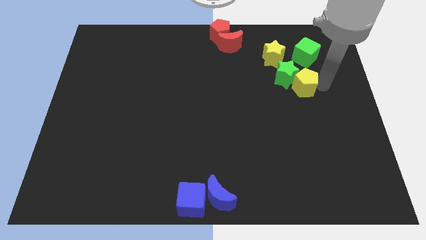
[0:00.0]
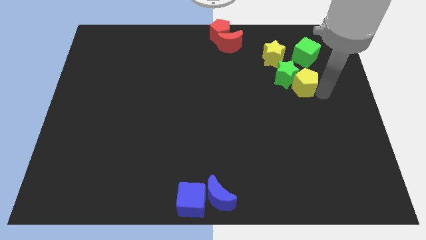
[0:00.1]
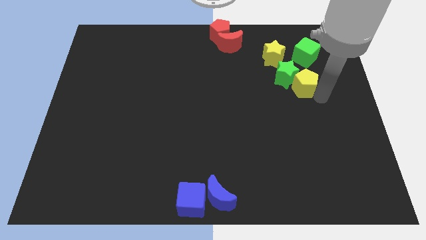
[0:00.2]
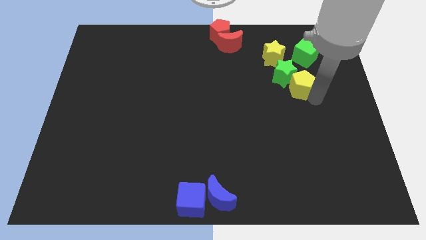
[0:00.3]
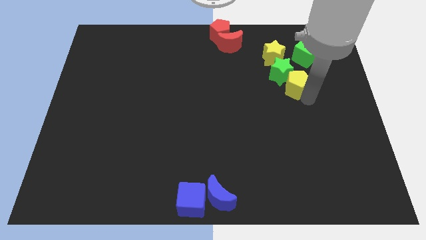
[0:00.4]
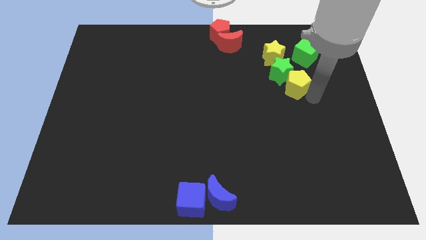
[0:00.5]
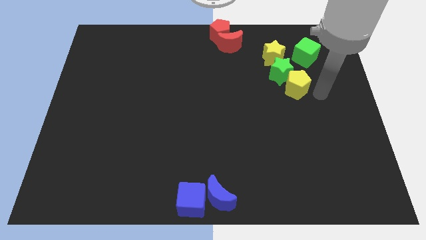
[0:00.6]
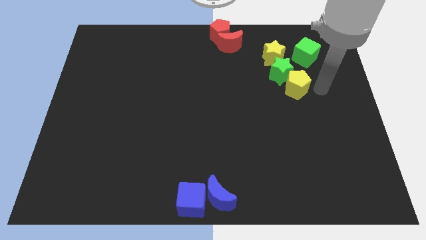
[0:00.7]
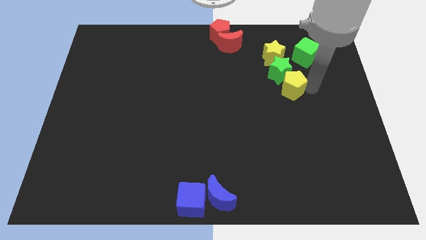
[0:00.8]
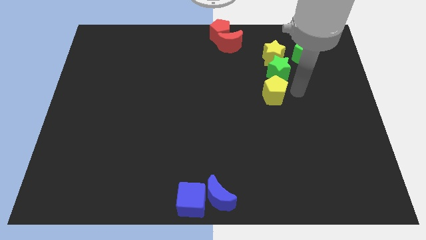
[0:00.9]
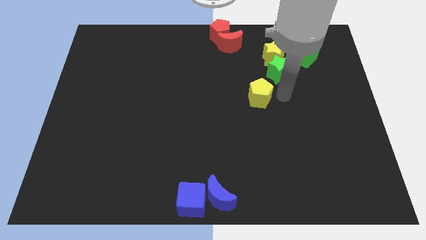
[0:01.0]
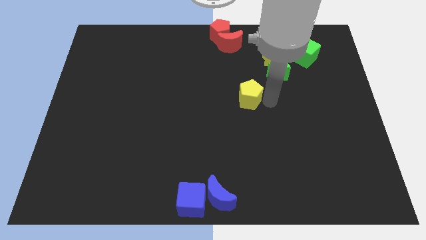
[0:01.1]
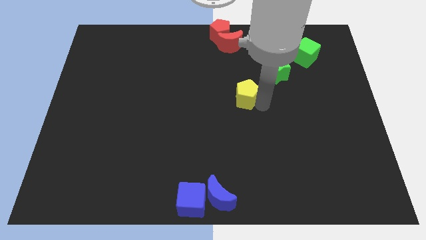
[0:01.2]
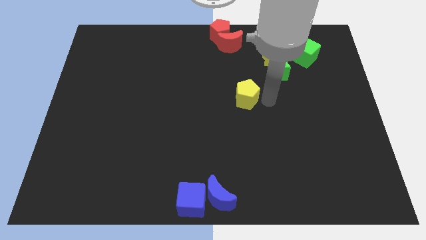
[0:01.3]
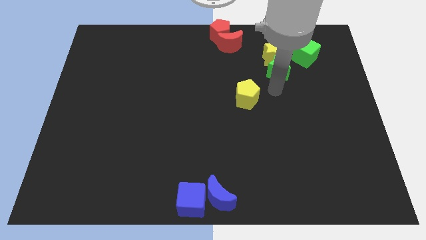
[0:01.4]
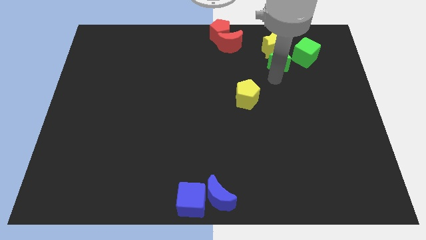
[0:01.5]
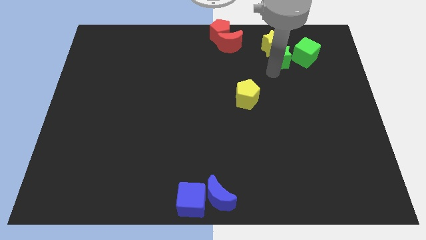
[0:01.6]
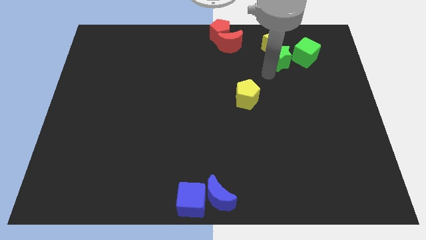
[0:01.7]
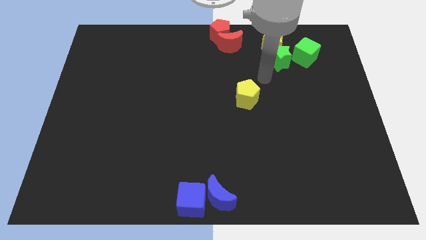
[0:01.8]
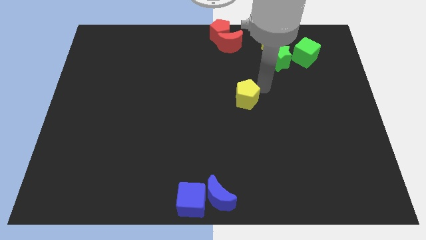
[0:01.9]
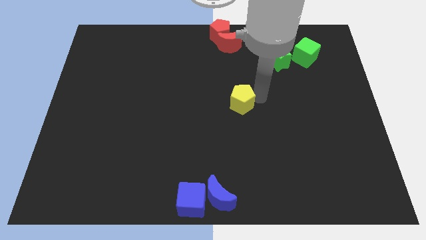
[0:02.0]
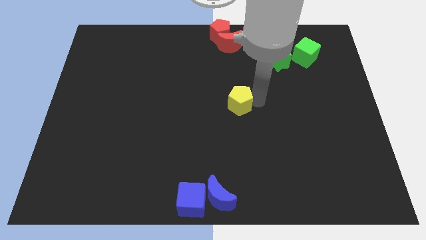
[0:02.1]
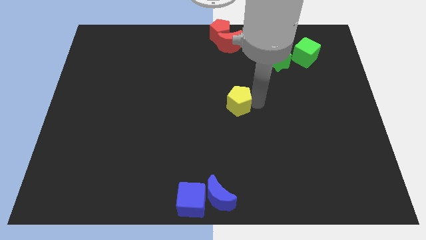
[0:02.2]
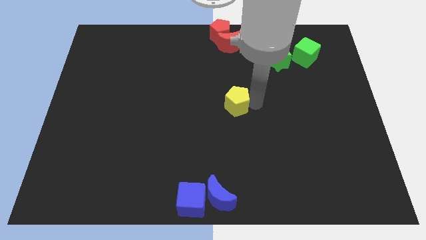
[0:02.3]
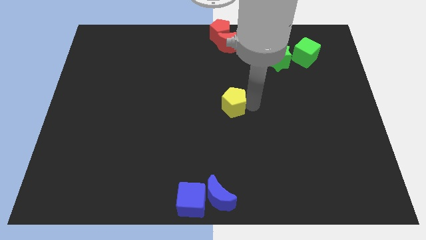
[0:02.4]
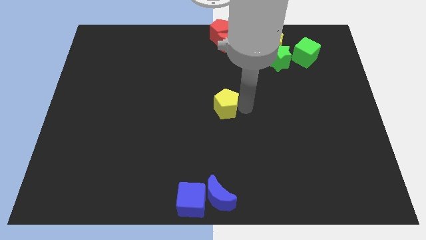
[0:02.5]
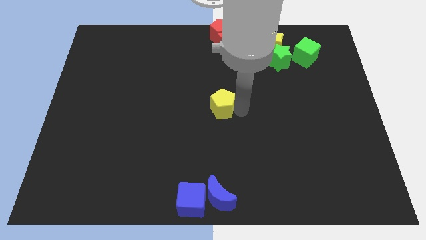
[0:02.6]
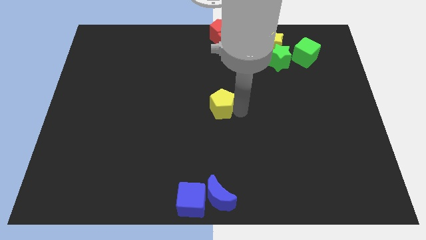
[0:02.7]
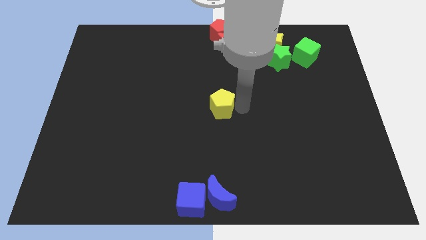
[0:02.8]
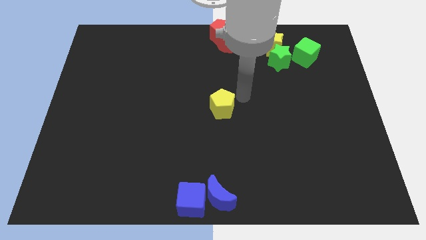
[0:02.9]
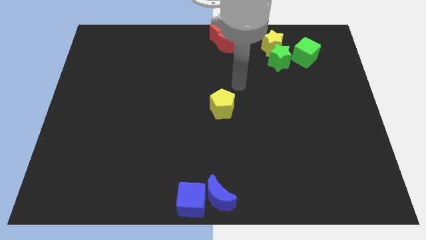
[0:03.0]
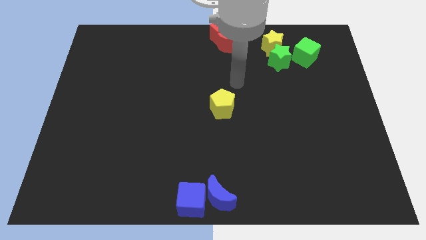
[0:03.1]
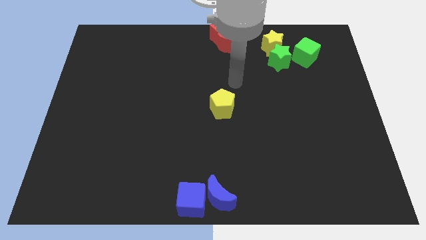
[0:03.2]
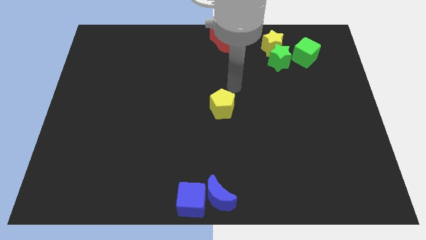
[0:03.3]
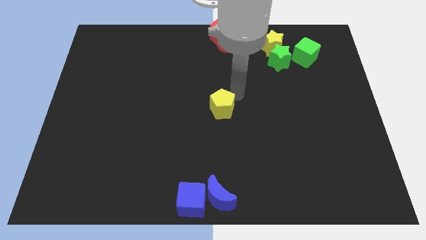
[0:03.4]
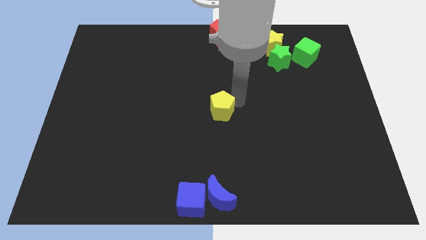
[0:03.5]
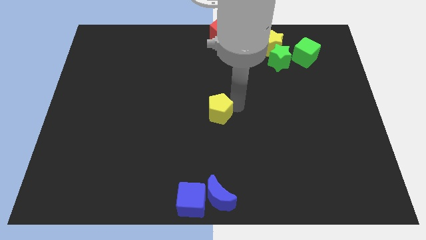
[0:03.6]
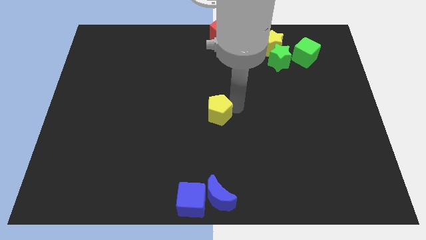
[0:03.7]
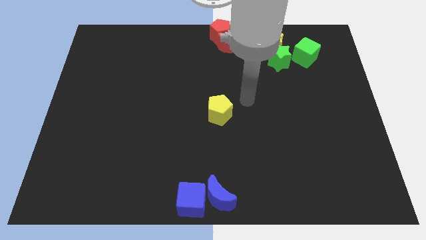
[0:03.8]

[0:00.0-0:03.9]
drag the yellow pentagon to the center of the table

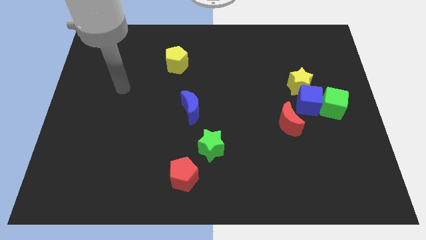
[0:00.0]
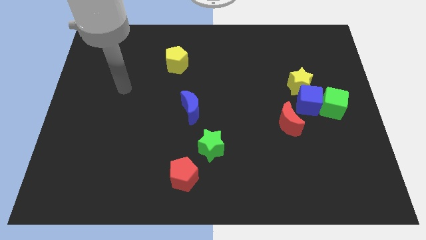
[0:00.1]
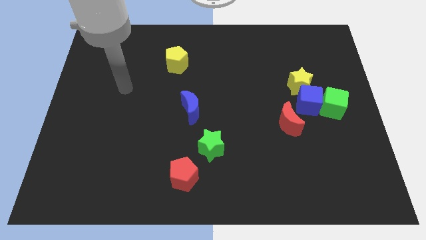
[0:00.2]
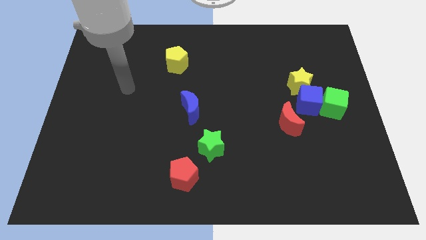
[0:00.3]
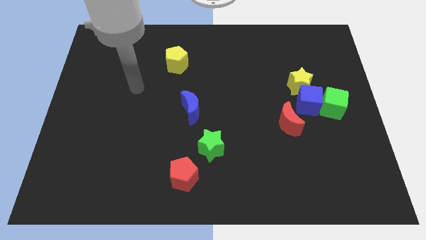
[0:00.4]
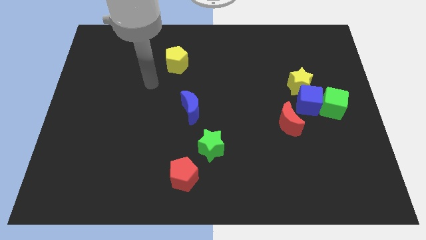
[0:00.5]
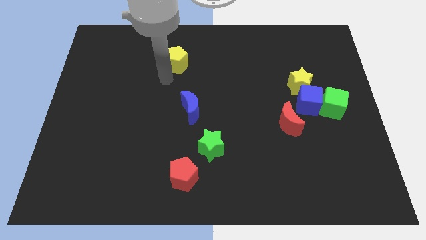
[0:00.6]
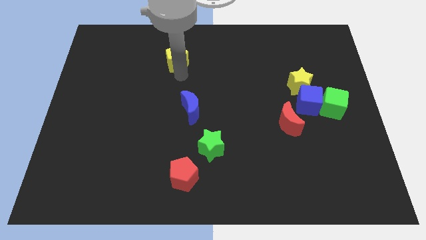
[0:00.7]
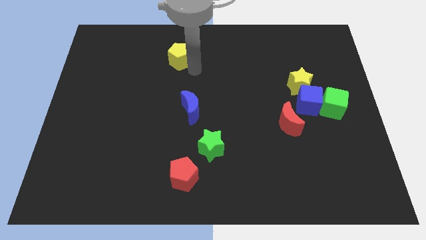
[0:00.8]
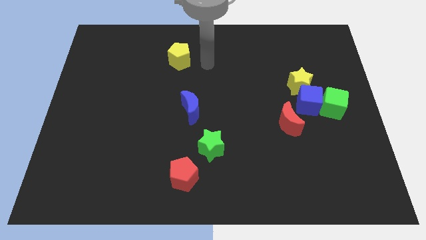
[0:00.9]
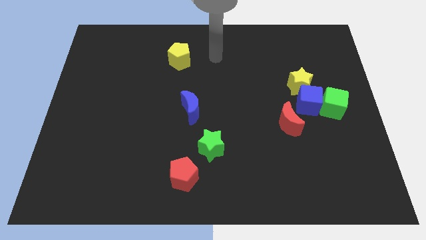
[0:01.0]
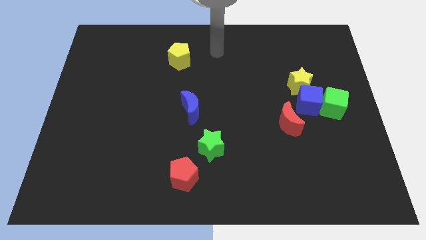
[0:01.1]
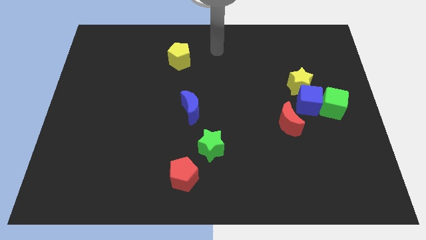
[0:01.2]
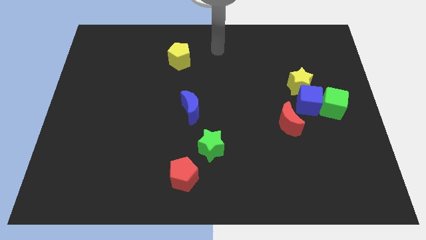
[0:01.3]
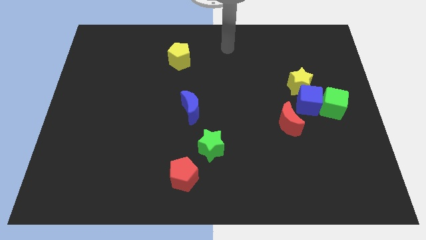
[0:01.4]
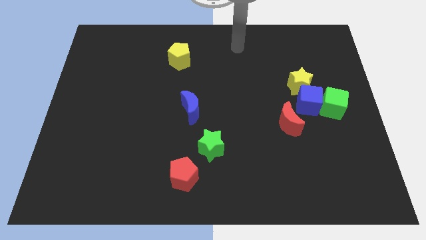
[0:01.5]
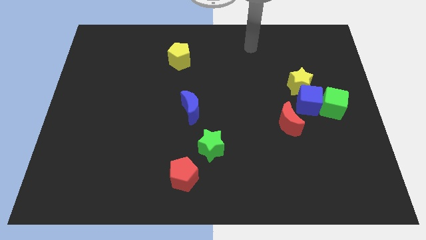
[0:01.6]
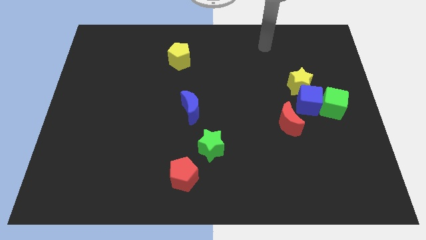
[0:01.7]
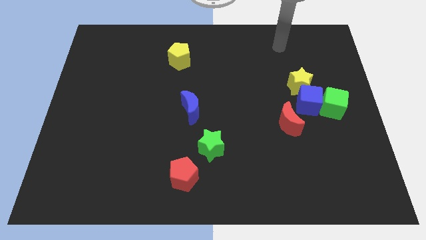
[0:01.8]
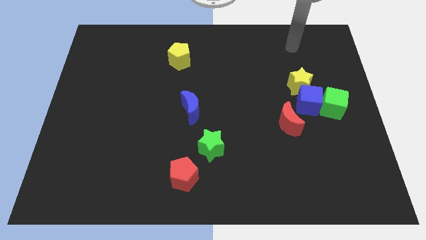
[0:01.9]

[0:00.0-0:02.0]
slightly push the yellow pentagon

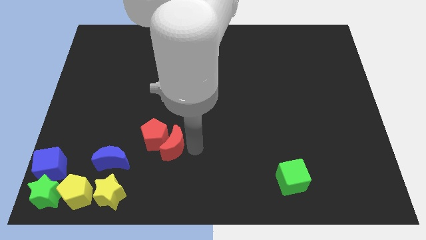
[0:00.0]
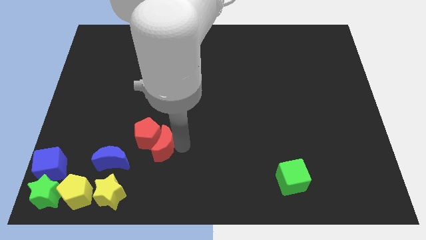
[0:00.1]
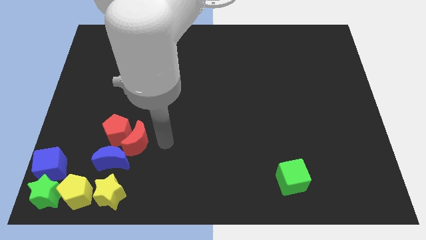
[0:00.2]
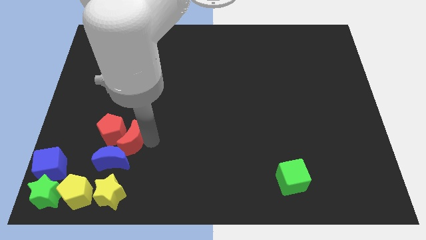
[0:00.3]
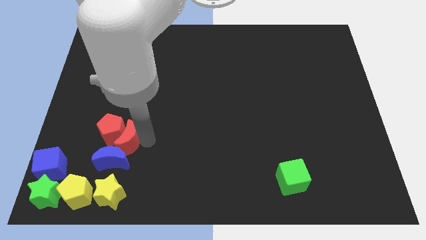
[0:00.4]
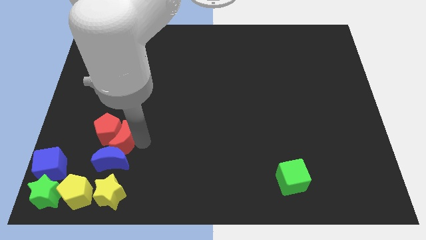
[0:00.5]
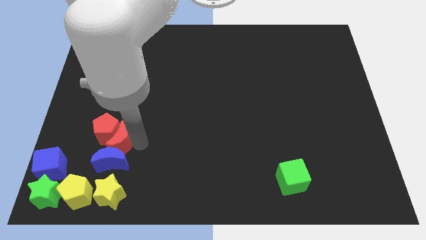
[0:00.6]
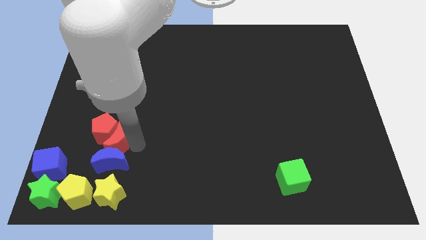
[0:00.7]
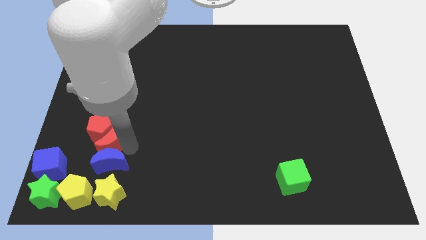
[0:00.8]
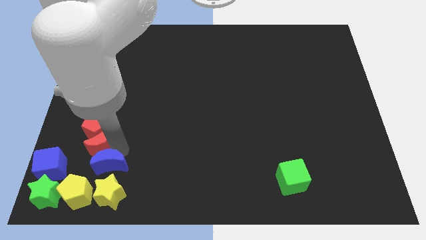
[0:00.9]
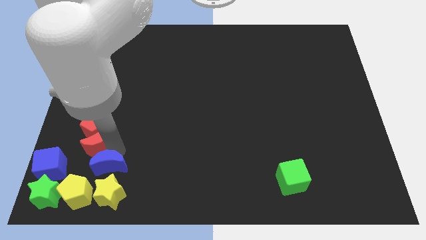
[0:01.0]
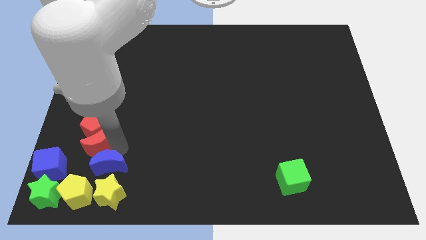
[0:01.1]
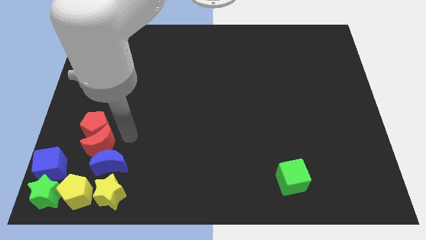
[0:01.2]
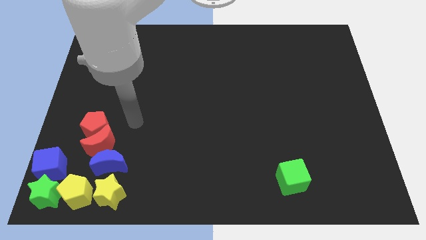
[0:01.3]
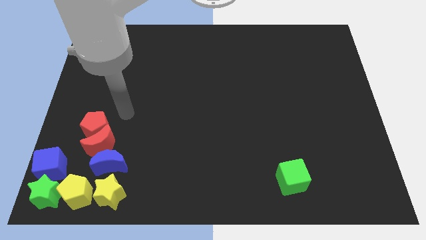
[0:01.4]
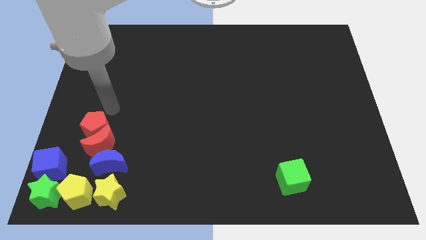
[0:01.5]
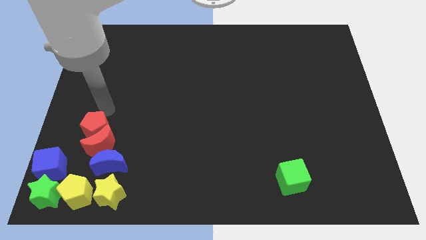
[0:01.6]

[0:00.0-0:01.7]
place the red crescent above the blue crescent

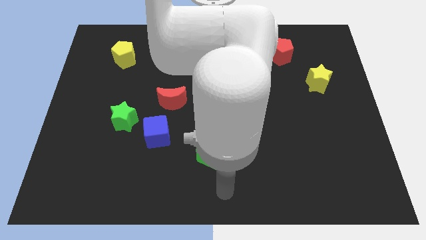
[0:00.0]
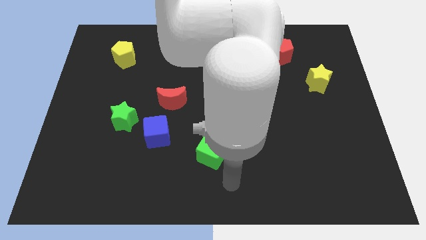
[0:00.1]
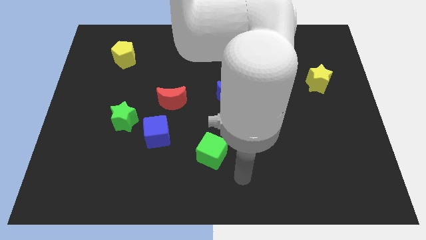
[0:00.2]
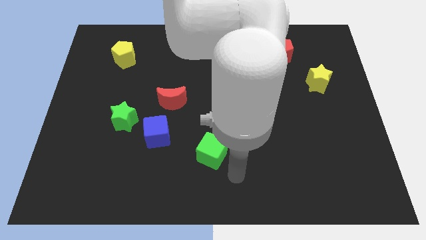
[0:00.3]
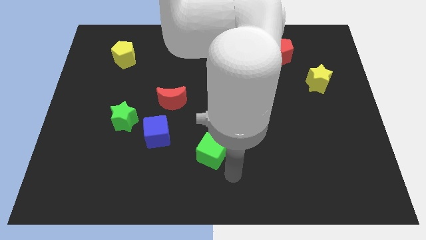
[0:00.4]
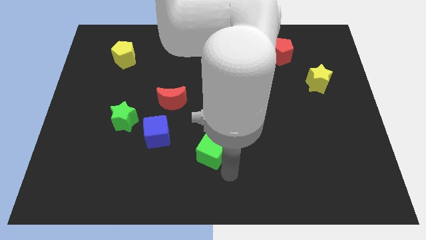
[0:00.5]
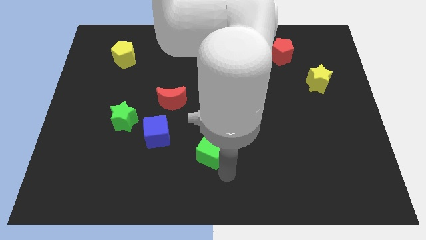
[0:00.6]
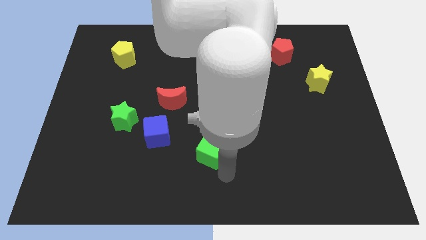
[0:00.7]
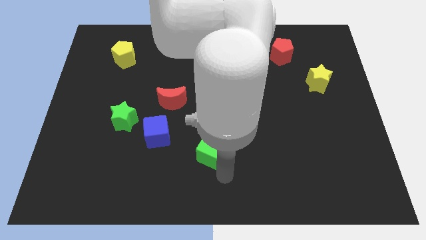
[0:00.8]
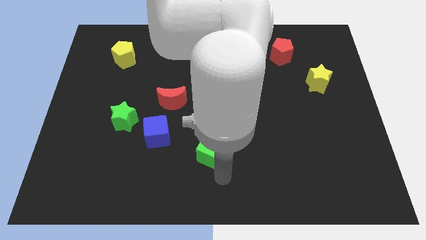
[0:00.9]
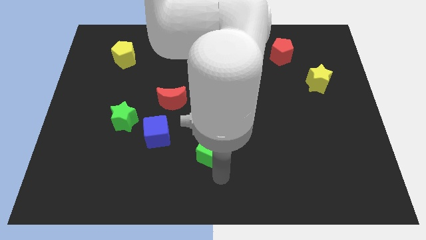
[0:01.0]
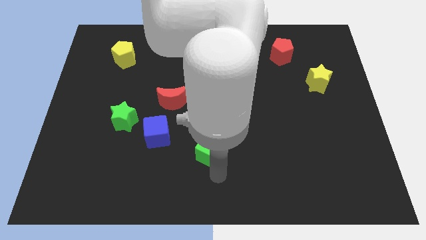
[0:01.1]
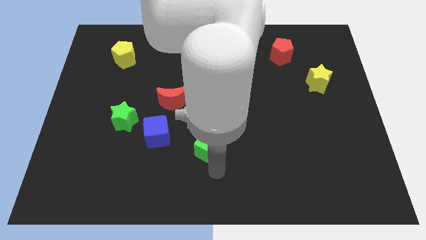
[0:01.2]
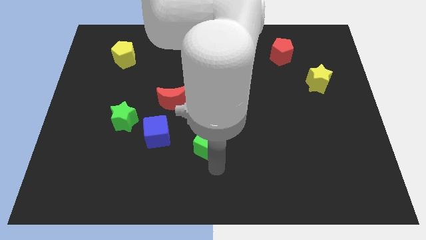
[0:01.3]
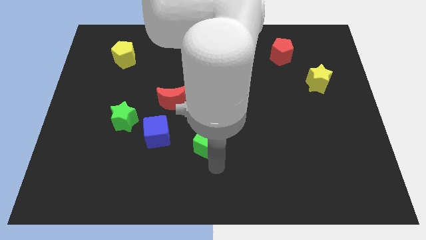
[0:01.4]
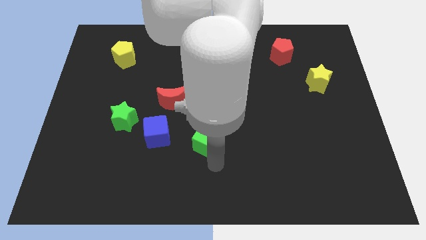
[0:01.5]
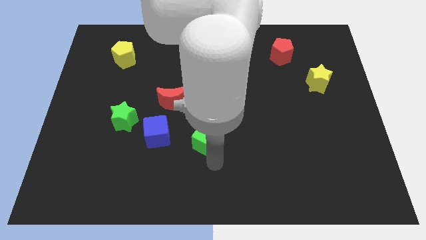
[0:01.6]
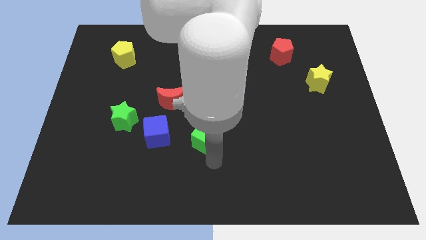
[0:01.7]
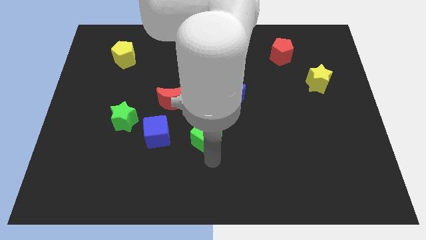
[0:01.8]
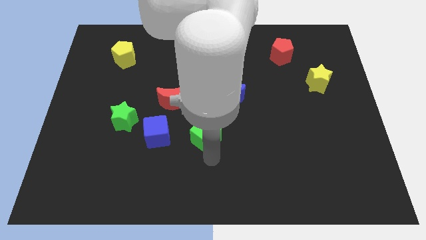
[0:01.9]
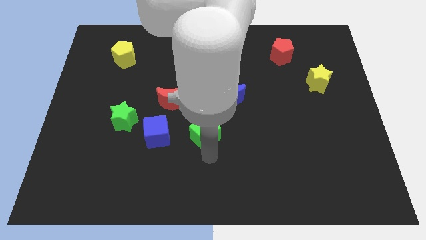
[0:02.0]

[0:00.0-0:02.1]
place the green cube parallel to the right of blue cube
